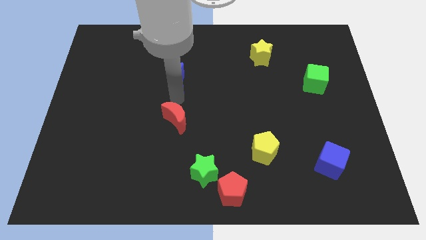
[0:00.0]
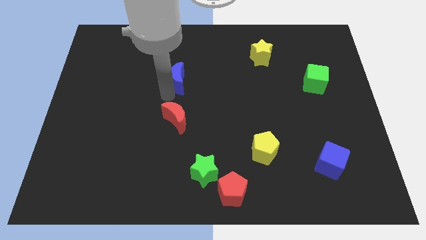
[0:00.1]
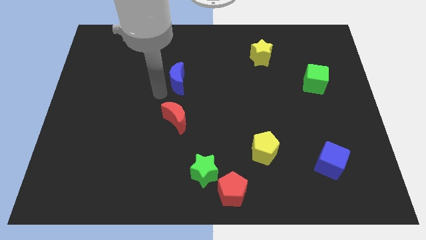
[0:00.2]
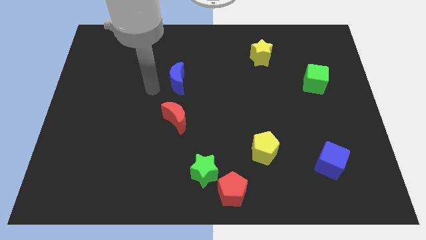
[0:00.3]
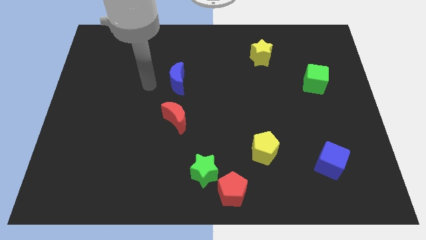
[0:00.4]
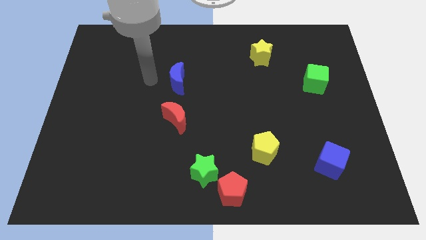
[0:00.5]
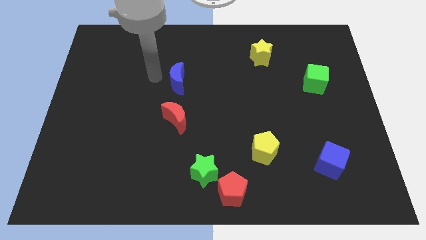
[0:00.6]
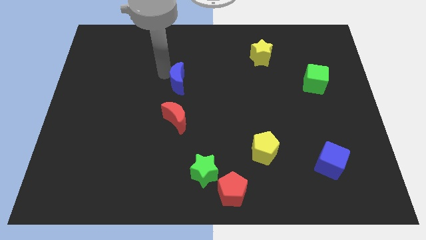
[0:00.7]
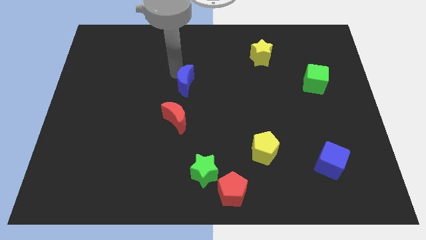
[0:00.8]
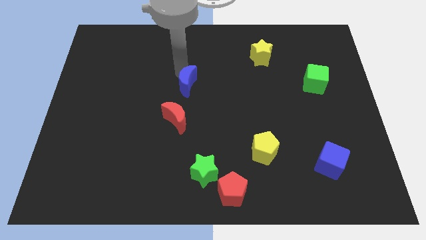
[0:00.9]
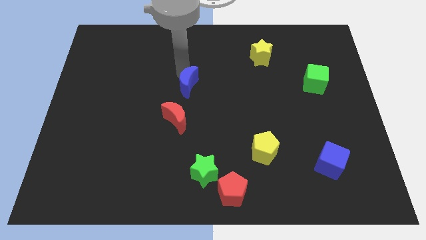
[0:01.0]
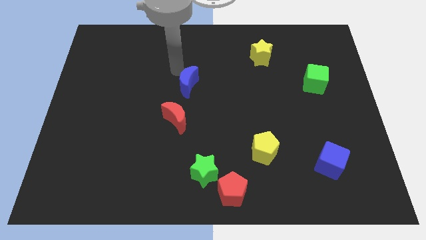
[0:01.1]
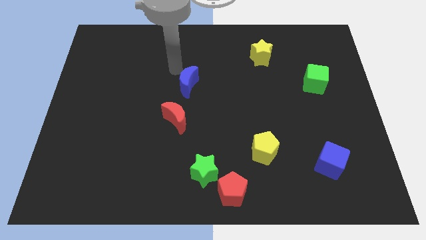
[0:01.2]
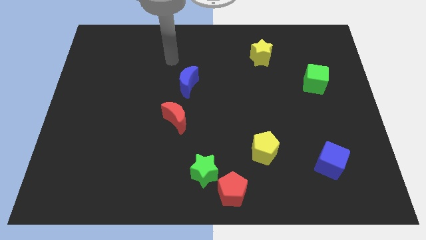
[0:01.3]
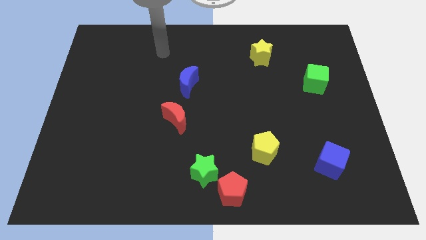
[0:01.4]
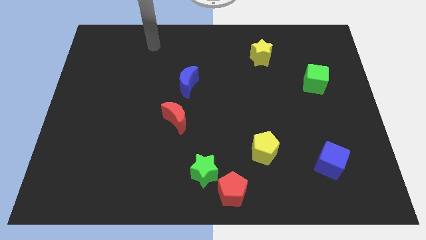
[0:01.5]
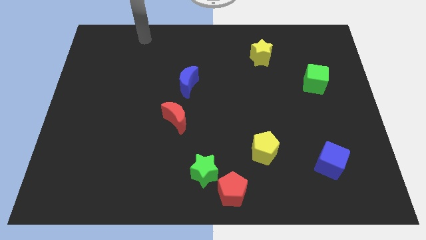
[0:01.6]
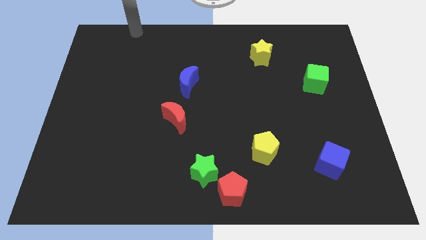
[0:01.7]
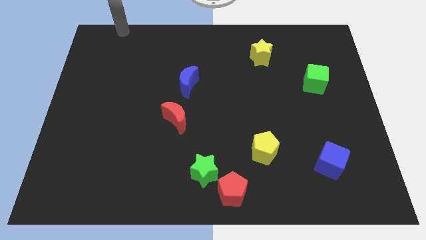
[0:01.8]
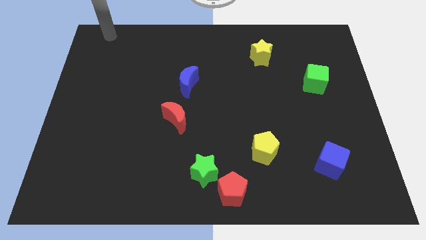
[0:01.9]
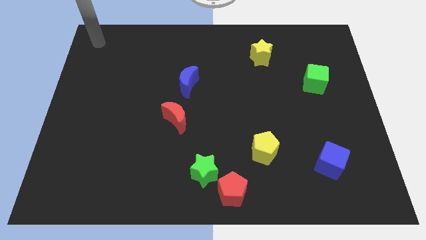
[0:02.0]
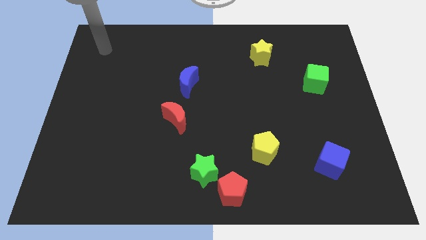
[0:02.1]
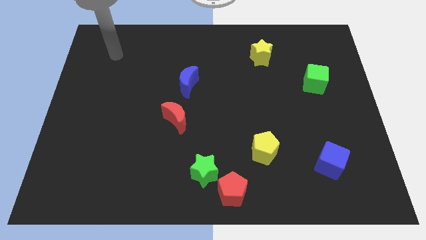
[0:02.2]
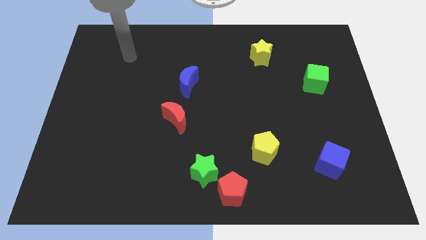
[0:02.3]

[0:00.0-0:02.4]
move the blue crescent above the red crescent

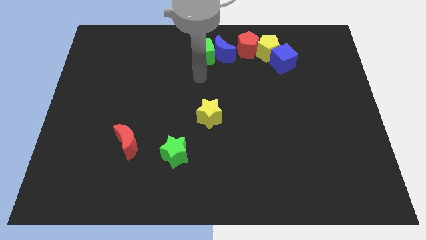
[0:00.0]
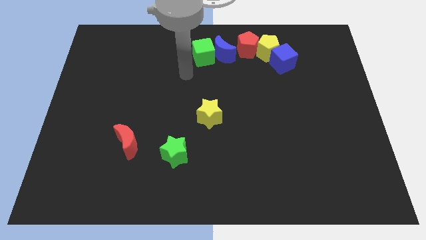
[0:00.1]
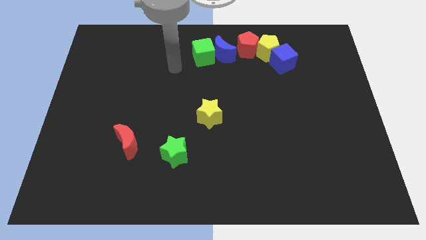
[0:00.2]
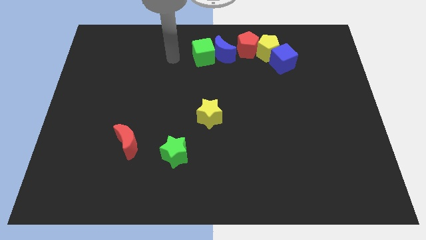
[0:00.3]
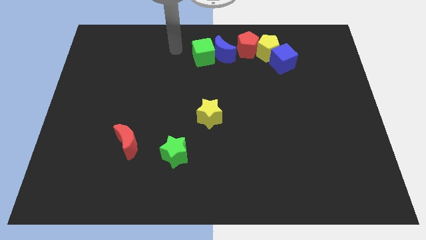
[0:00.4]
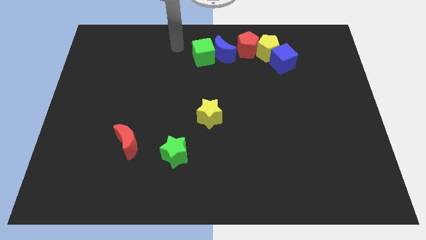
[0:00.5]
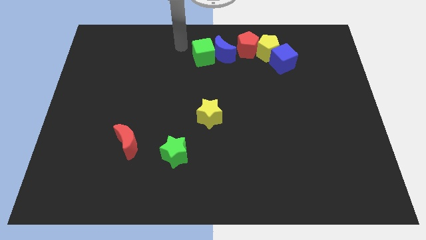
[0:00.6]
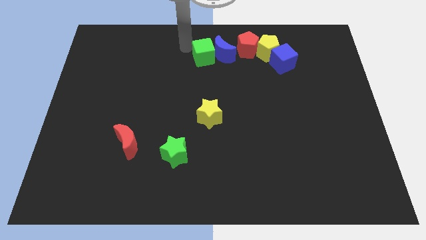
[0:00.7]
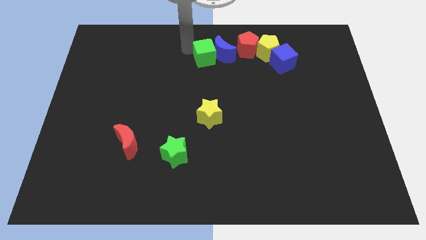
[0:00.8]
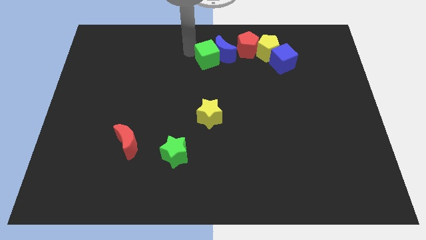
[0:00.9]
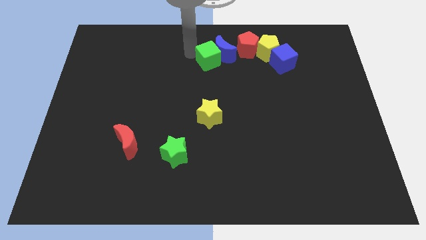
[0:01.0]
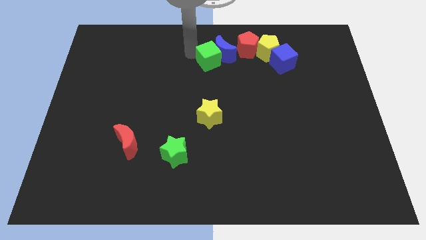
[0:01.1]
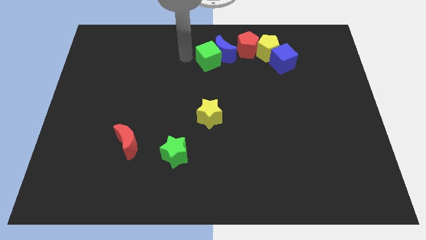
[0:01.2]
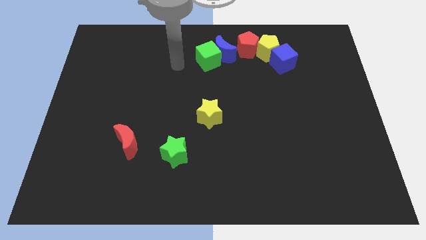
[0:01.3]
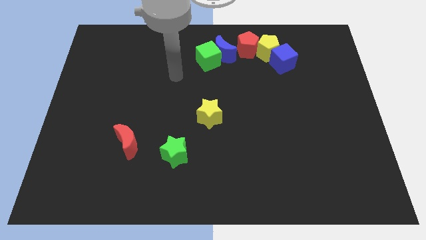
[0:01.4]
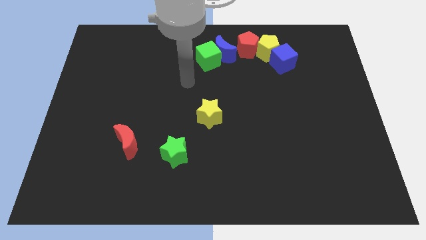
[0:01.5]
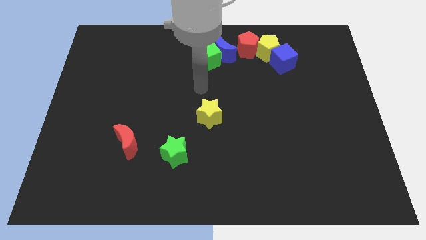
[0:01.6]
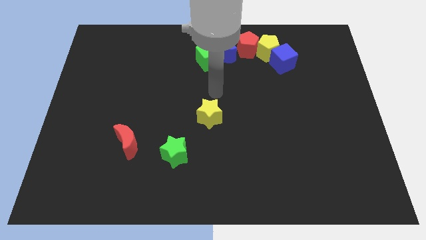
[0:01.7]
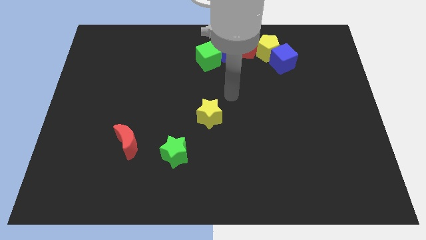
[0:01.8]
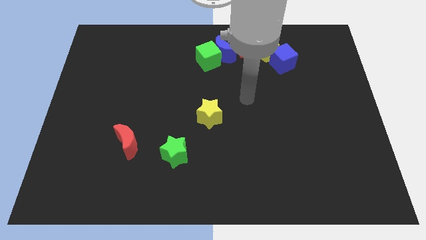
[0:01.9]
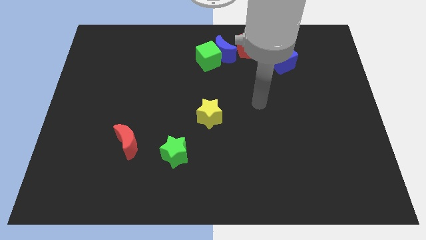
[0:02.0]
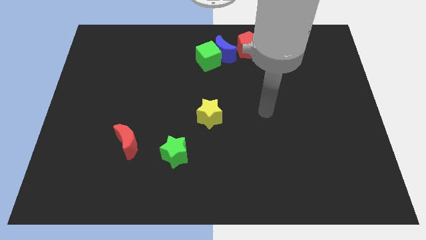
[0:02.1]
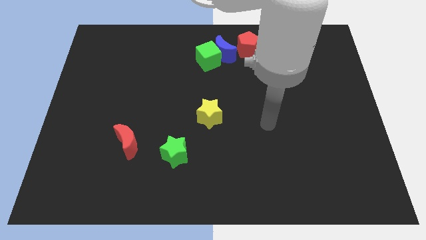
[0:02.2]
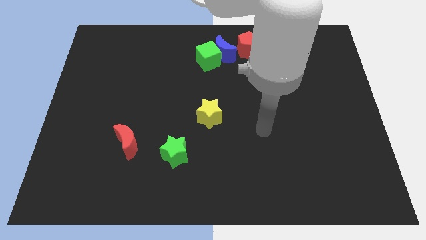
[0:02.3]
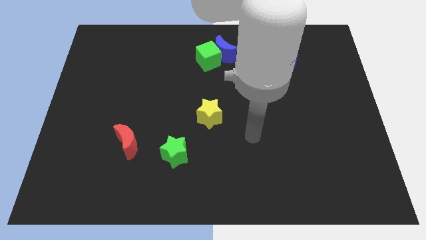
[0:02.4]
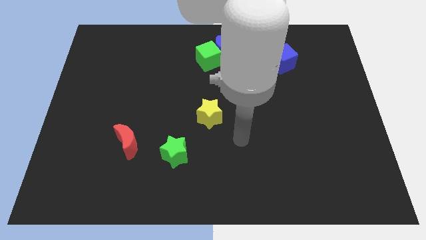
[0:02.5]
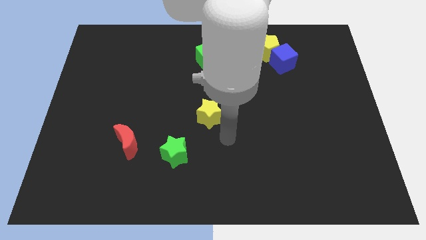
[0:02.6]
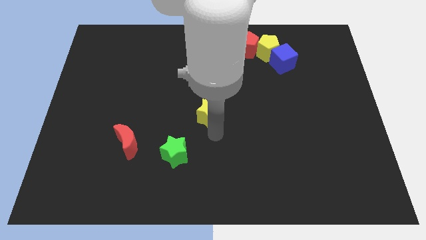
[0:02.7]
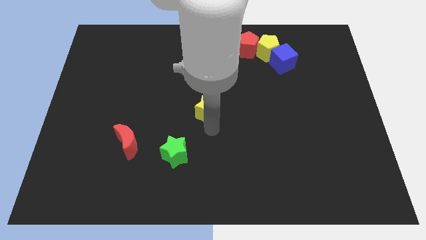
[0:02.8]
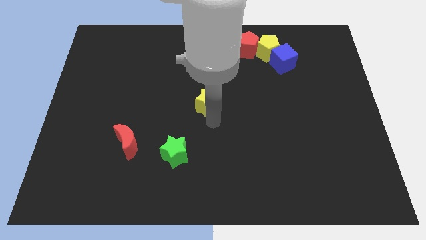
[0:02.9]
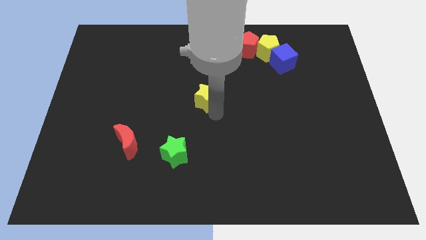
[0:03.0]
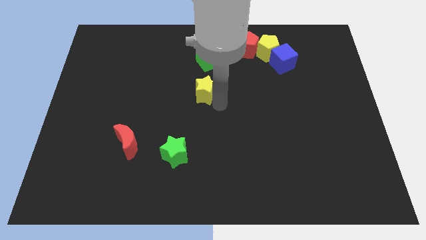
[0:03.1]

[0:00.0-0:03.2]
place the arm under the yellow star

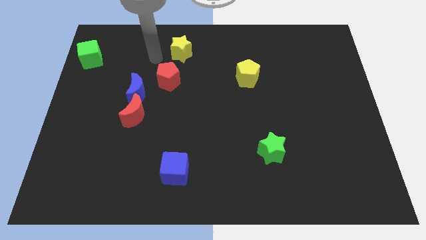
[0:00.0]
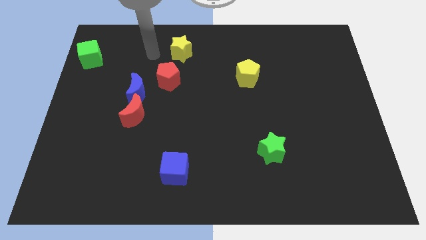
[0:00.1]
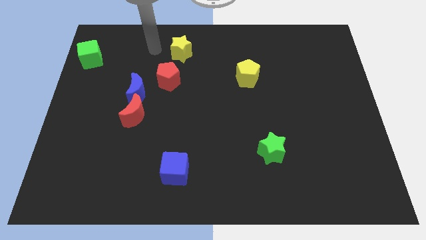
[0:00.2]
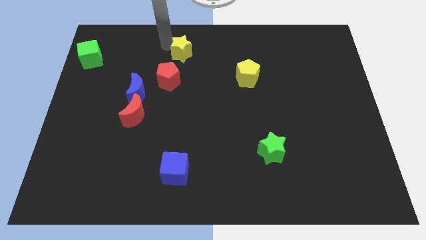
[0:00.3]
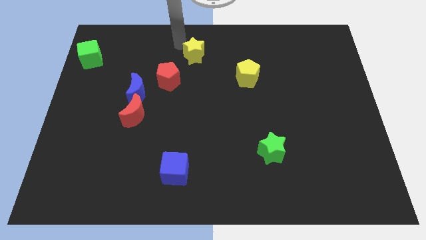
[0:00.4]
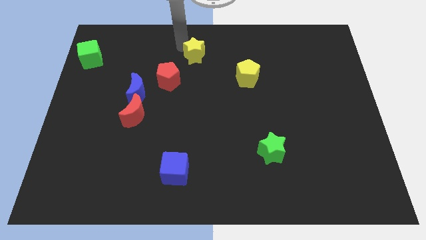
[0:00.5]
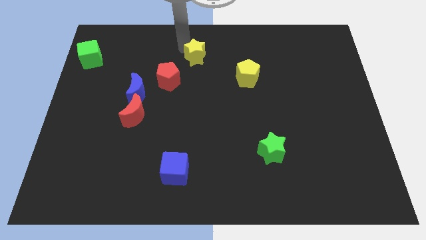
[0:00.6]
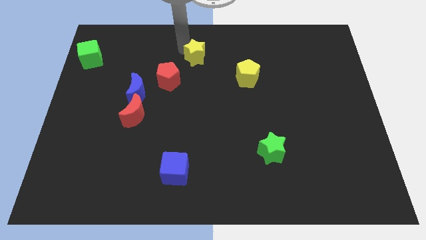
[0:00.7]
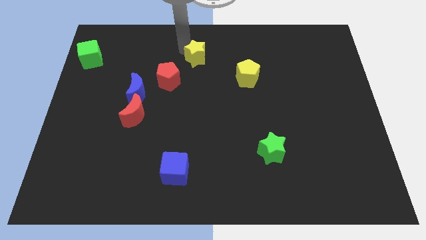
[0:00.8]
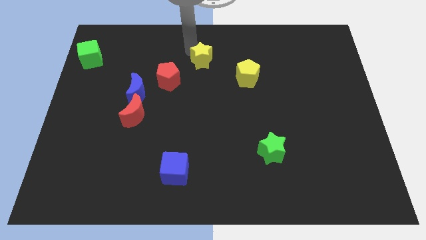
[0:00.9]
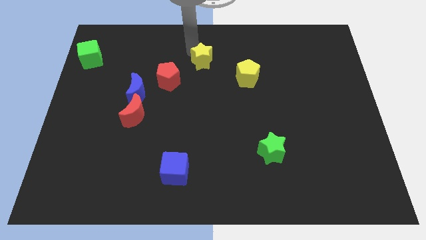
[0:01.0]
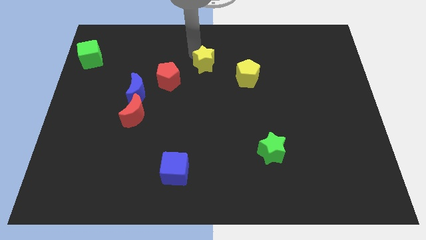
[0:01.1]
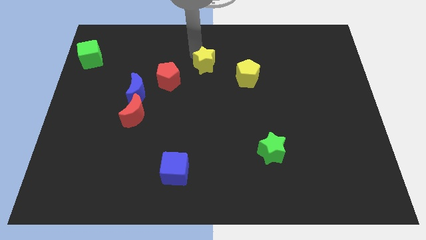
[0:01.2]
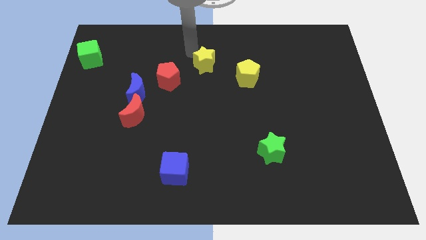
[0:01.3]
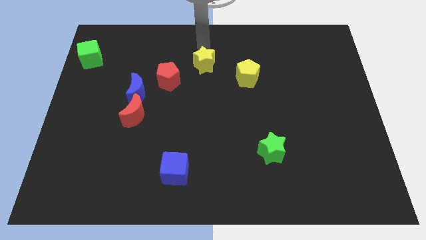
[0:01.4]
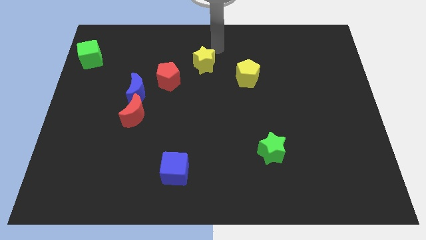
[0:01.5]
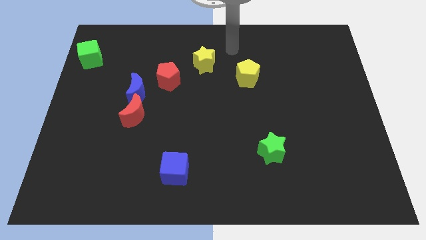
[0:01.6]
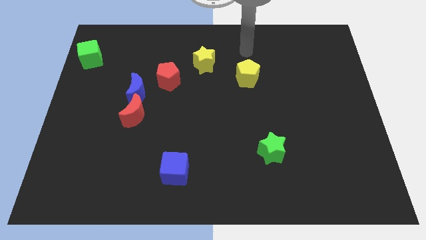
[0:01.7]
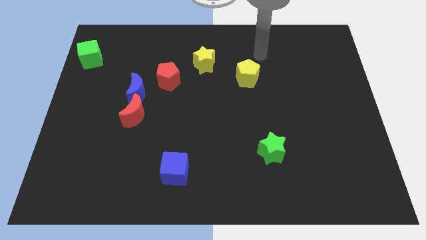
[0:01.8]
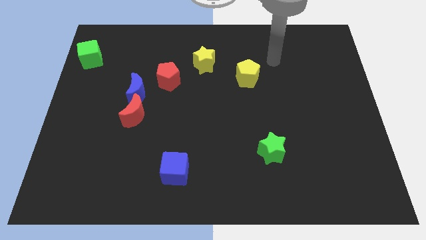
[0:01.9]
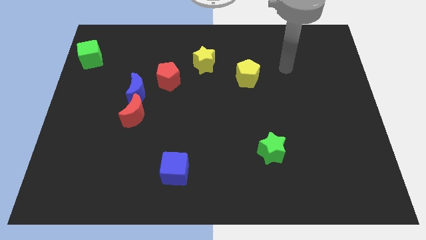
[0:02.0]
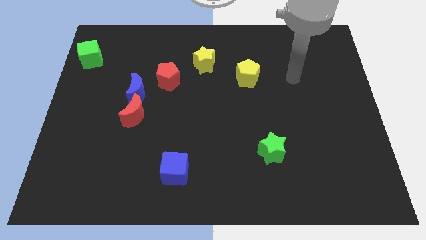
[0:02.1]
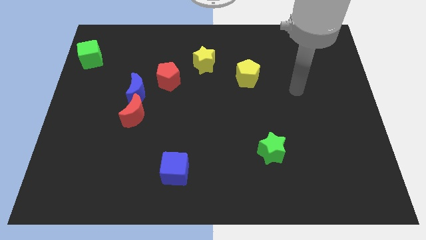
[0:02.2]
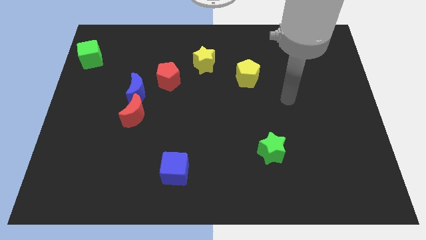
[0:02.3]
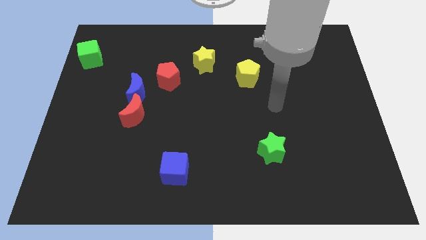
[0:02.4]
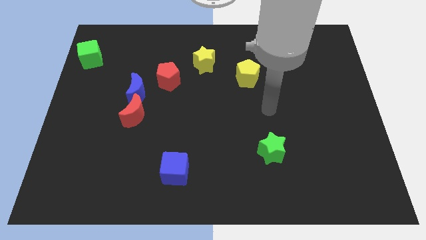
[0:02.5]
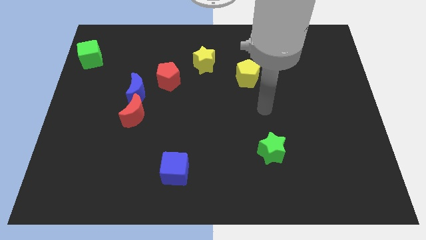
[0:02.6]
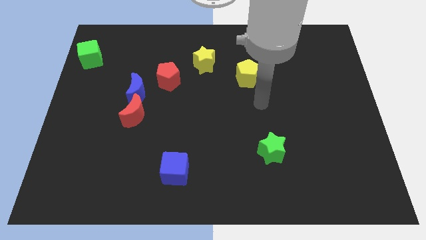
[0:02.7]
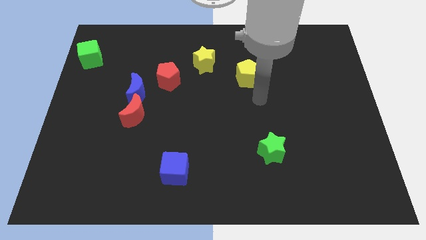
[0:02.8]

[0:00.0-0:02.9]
place yellow star near to red pentagon as well as yellow pentagon

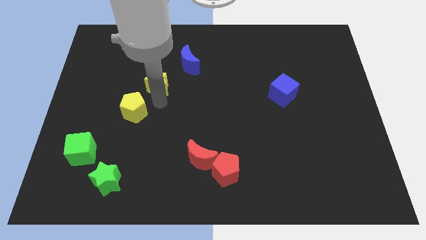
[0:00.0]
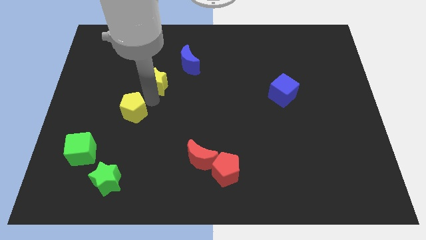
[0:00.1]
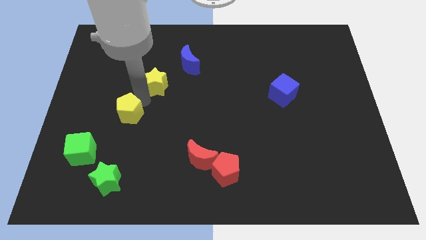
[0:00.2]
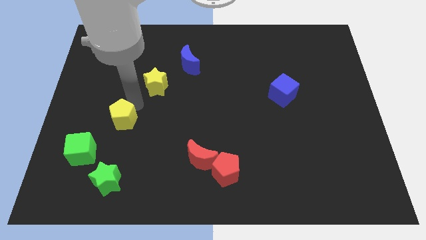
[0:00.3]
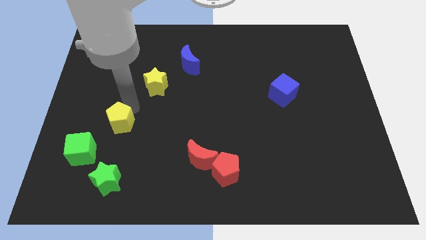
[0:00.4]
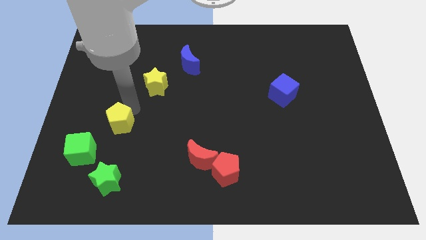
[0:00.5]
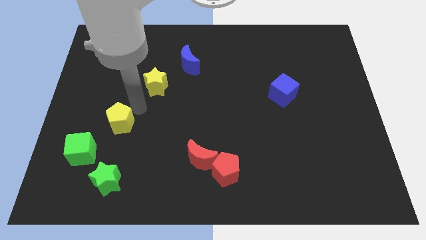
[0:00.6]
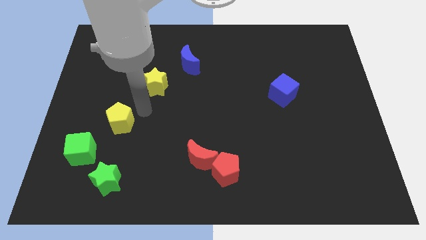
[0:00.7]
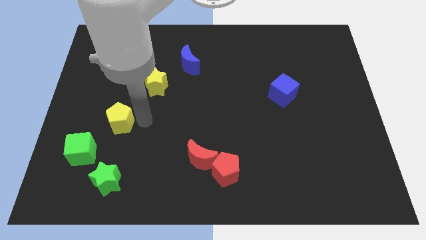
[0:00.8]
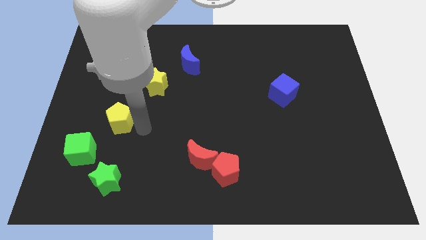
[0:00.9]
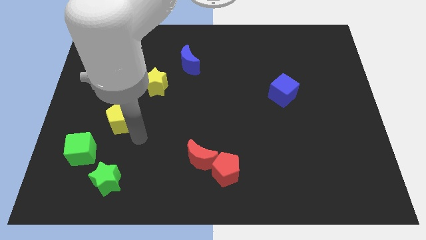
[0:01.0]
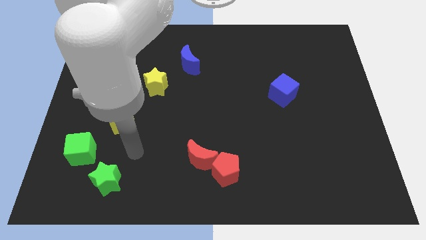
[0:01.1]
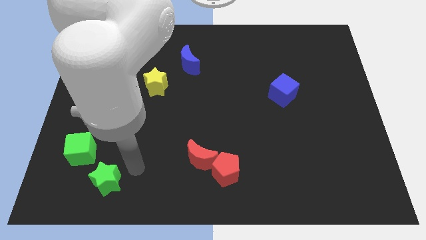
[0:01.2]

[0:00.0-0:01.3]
slightly push the yellow pentagon diagonal to the green cube
